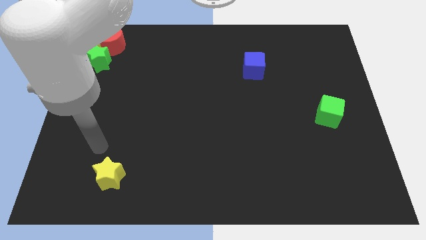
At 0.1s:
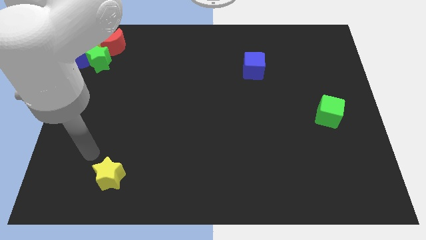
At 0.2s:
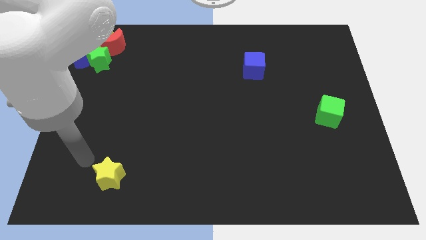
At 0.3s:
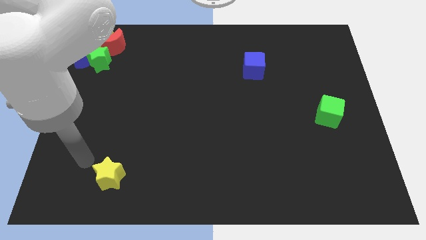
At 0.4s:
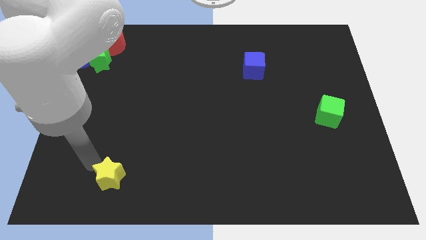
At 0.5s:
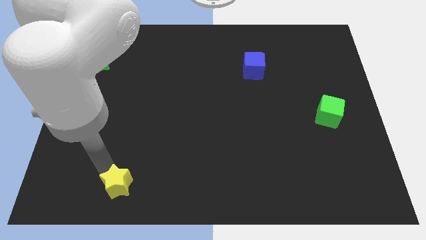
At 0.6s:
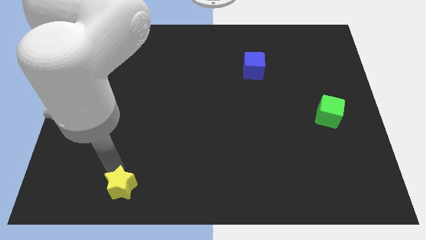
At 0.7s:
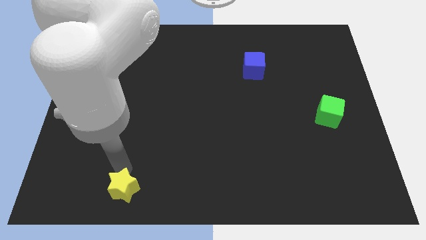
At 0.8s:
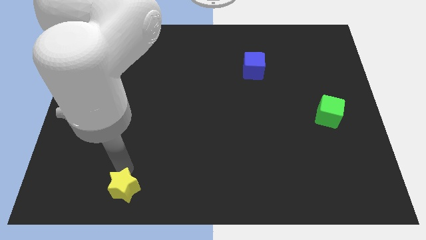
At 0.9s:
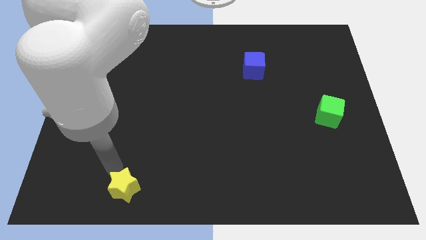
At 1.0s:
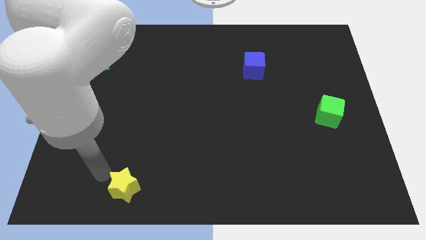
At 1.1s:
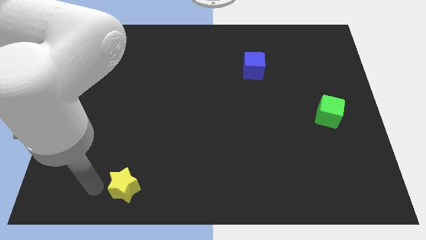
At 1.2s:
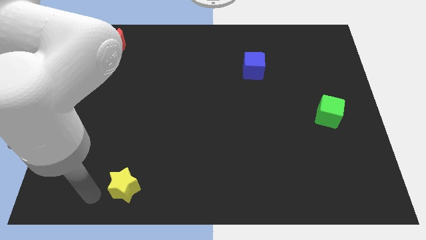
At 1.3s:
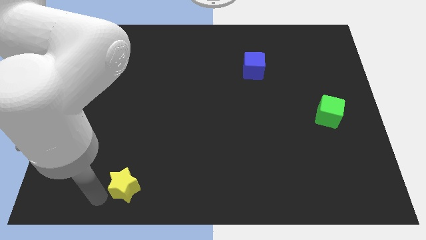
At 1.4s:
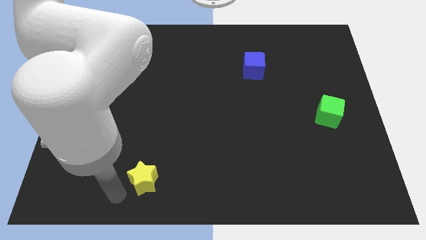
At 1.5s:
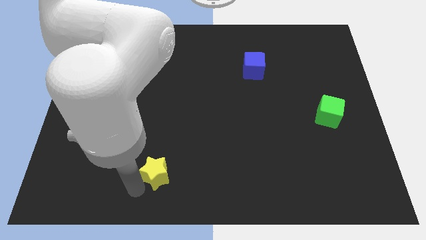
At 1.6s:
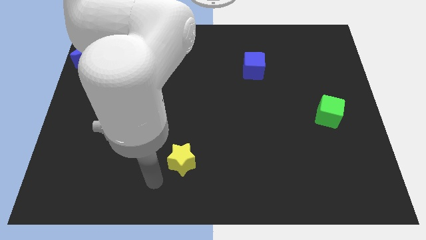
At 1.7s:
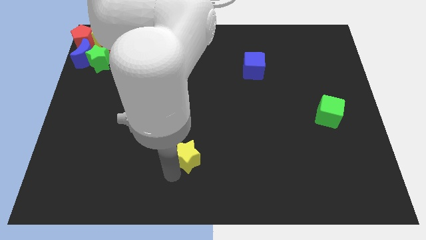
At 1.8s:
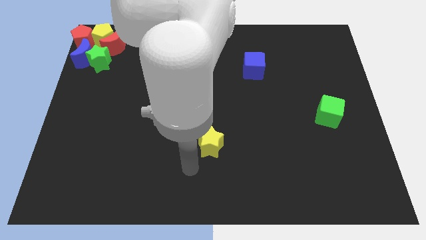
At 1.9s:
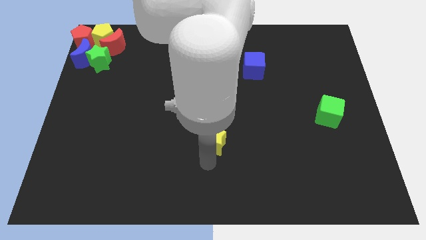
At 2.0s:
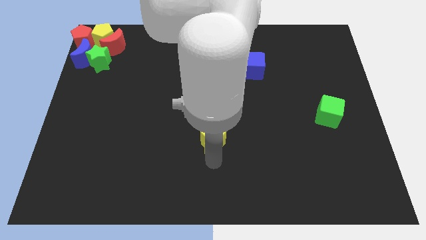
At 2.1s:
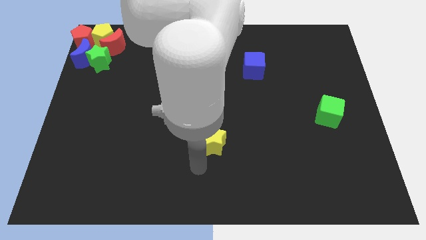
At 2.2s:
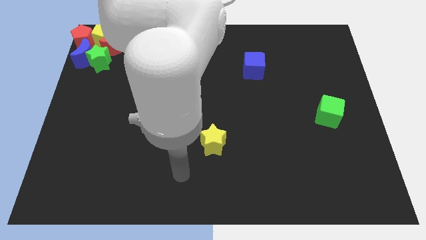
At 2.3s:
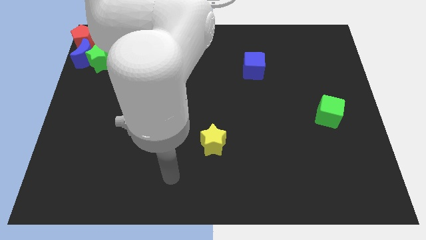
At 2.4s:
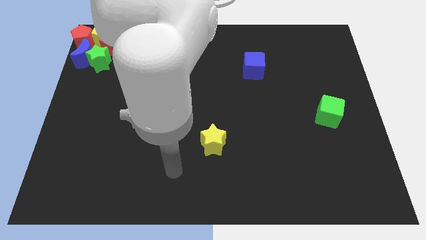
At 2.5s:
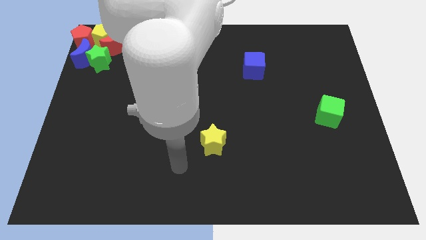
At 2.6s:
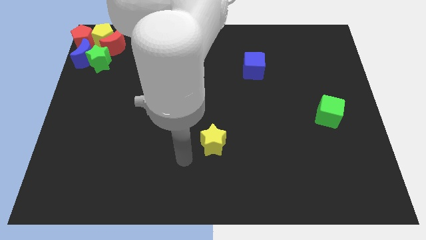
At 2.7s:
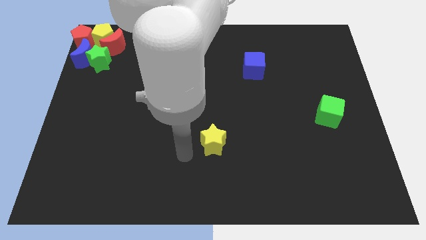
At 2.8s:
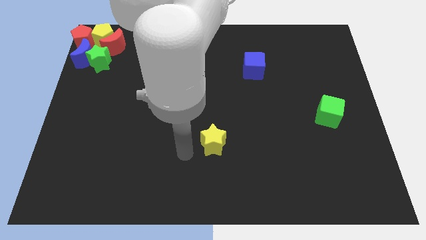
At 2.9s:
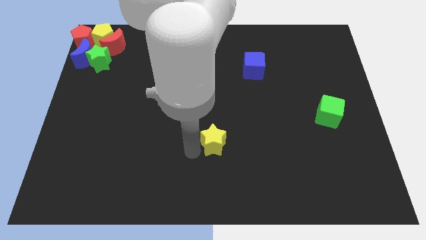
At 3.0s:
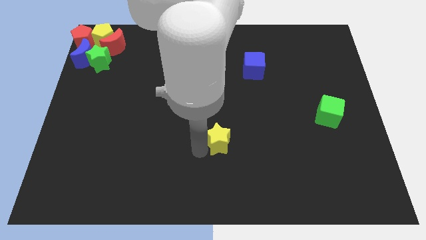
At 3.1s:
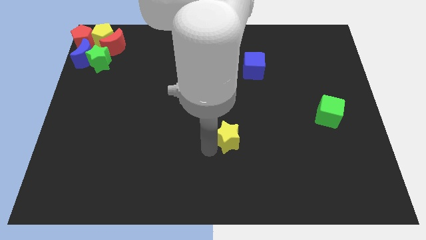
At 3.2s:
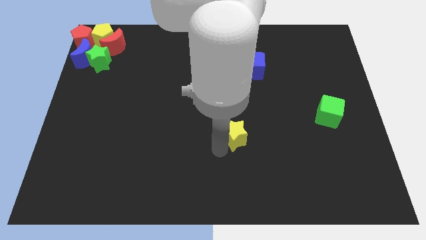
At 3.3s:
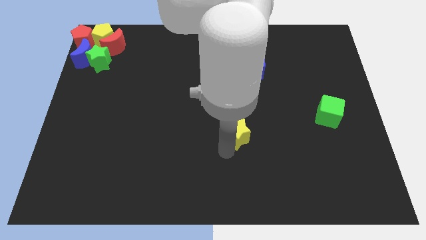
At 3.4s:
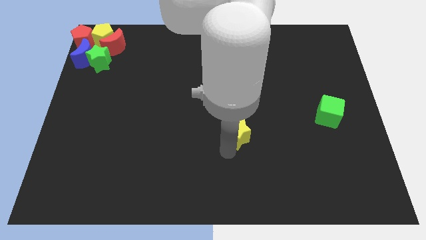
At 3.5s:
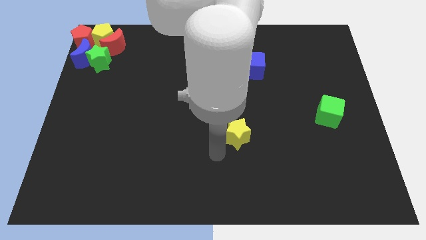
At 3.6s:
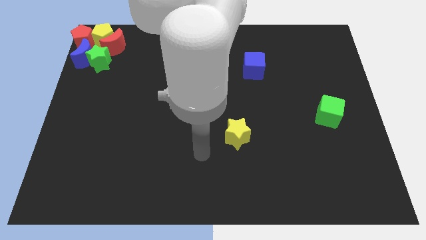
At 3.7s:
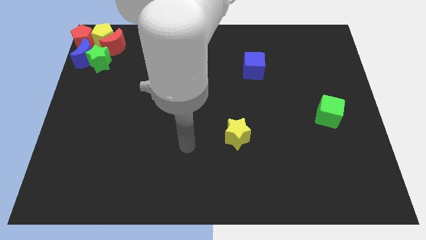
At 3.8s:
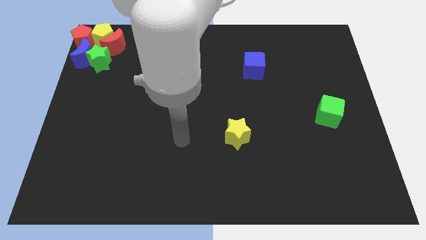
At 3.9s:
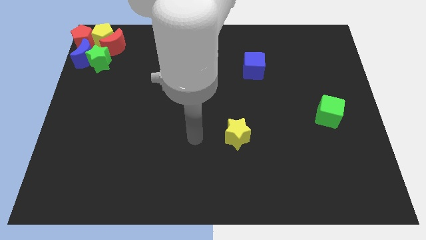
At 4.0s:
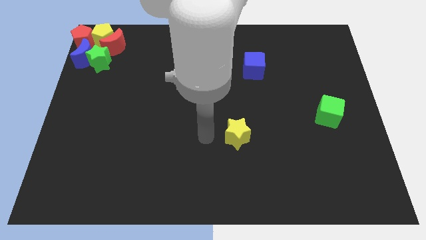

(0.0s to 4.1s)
place the yellow star below the blue moon

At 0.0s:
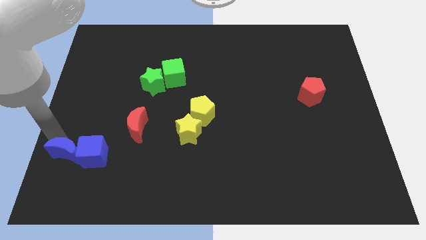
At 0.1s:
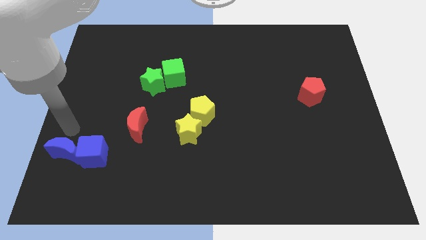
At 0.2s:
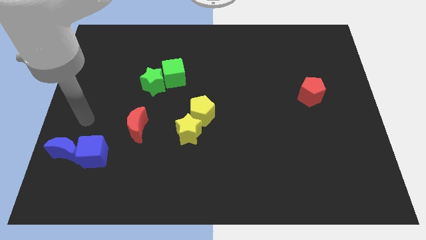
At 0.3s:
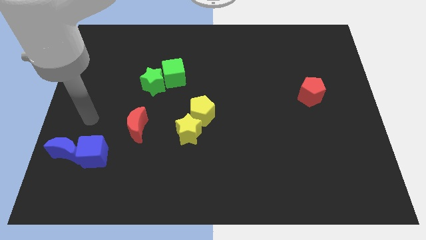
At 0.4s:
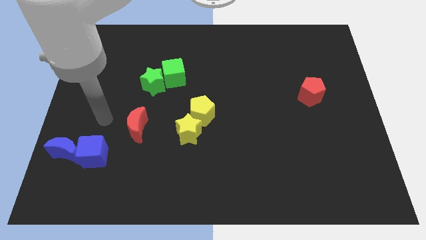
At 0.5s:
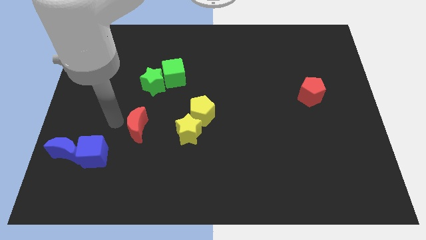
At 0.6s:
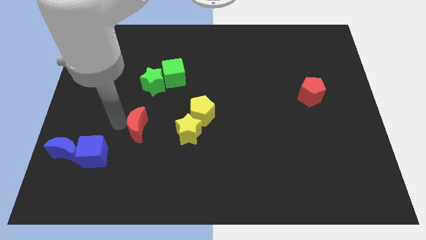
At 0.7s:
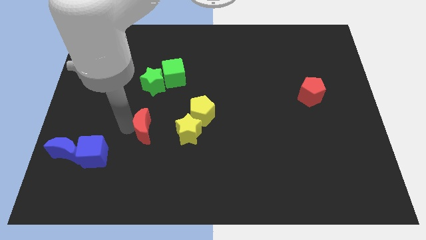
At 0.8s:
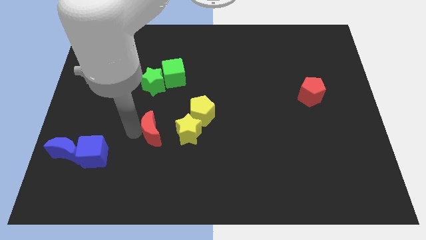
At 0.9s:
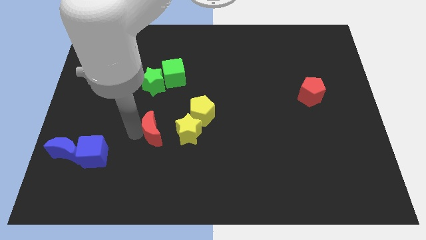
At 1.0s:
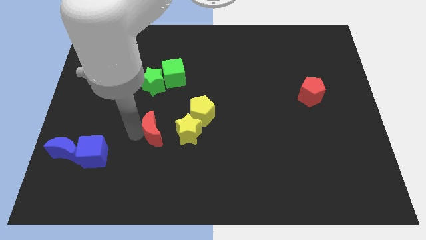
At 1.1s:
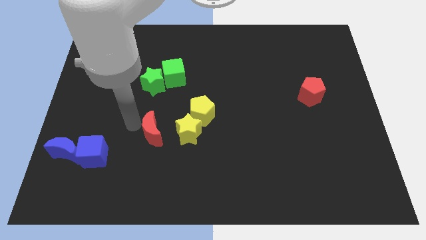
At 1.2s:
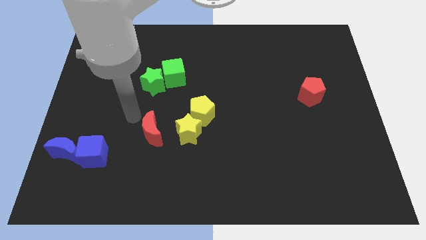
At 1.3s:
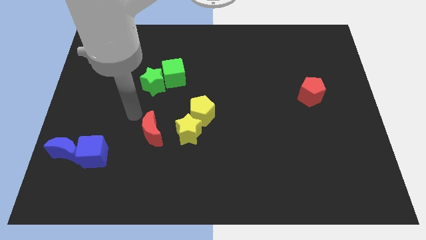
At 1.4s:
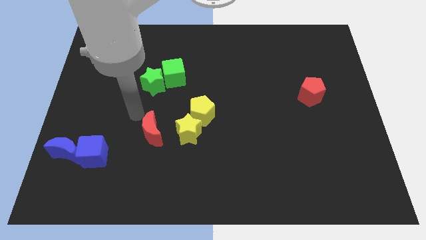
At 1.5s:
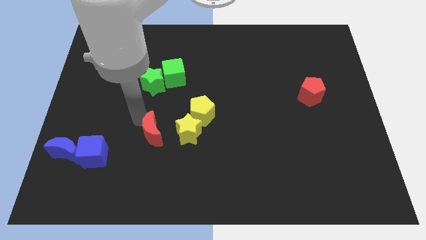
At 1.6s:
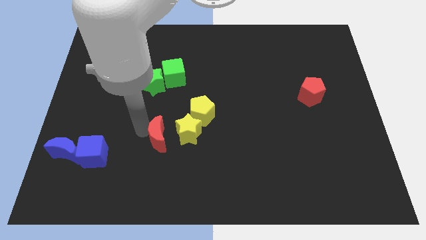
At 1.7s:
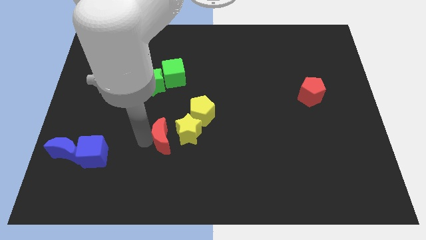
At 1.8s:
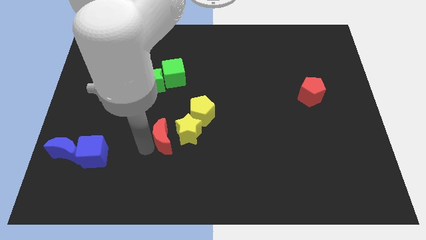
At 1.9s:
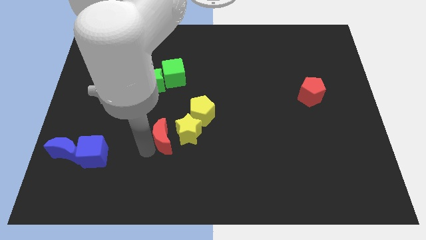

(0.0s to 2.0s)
push the red moon close to the yellow star

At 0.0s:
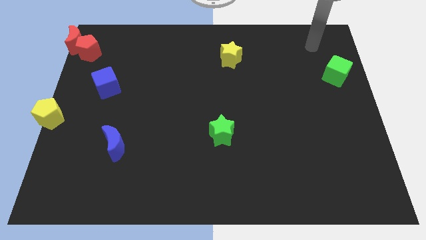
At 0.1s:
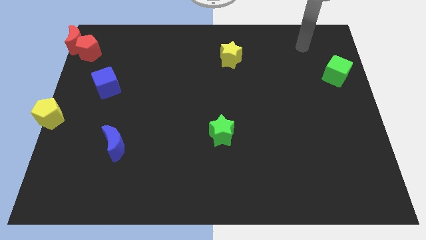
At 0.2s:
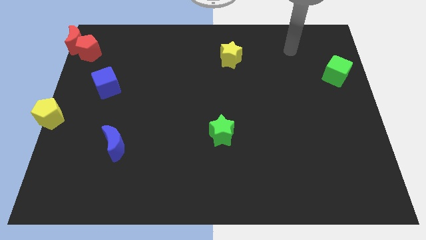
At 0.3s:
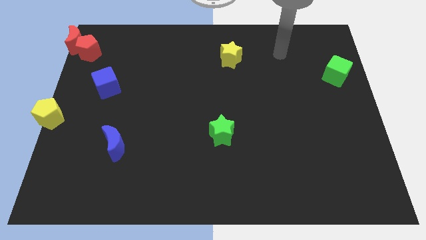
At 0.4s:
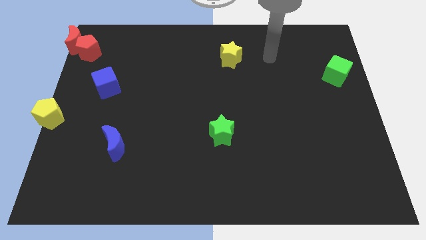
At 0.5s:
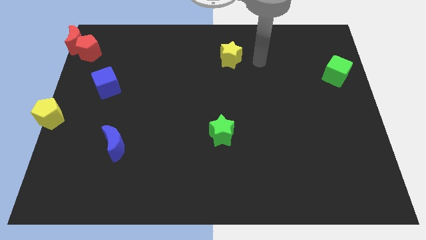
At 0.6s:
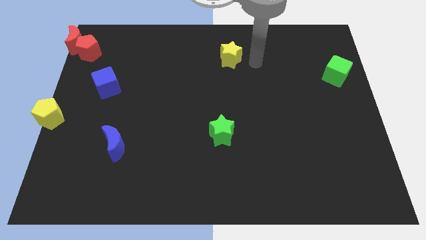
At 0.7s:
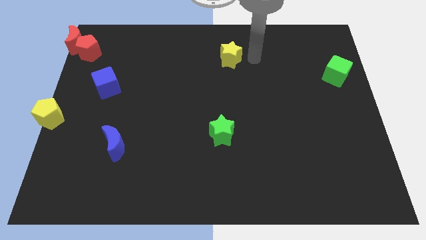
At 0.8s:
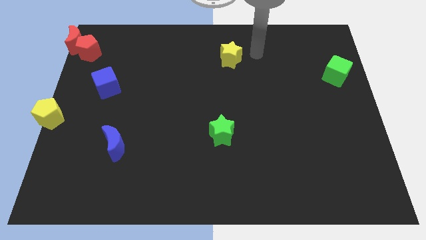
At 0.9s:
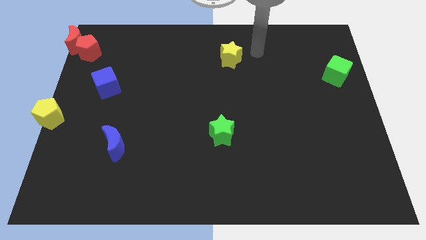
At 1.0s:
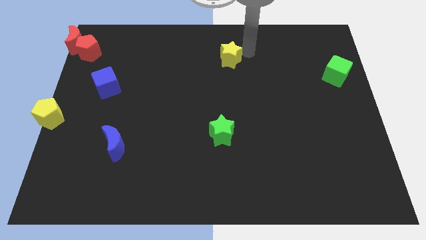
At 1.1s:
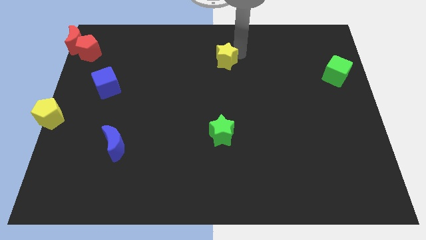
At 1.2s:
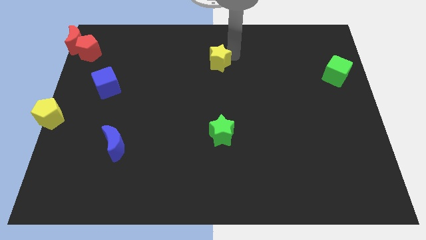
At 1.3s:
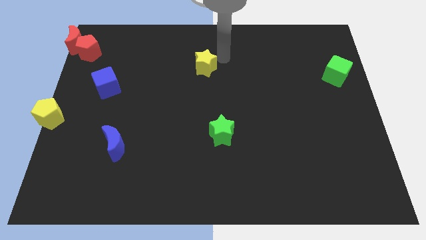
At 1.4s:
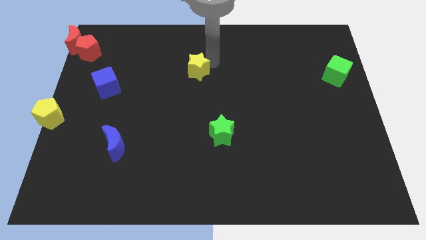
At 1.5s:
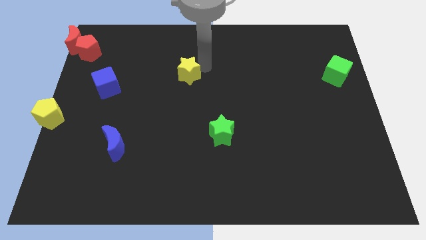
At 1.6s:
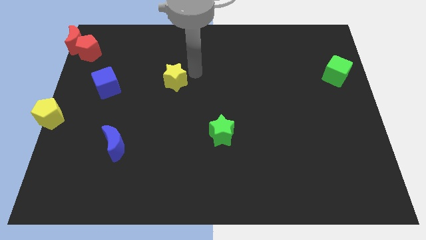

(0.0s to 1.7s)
move the yellow star diagonal to the green star

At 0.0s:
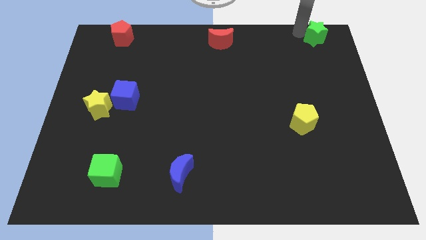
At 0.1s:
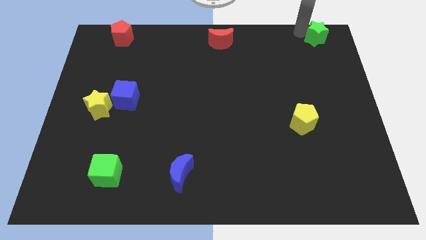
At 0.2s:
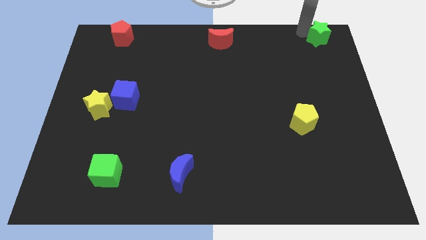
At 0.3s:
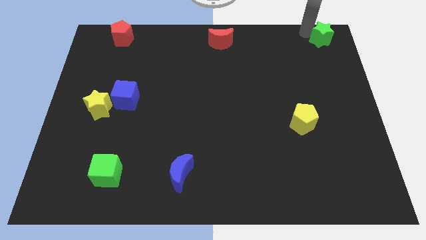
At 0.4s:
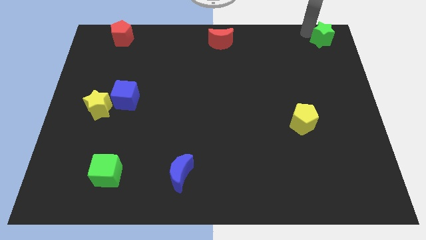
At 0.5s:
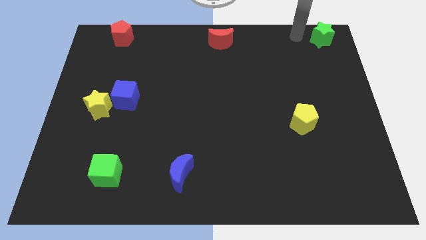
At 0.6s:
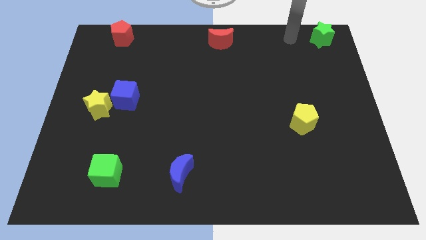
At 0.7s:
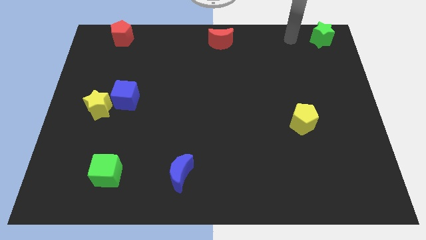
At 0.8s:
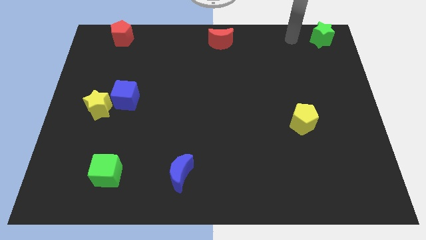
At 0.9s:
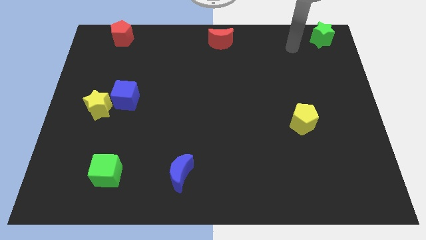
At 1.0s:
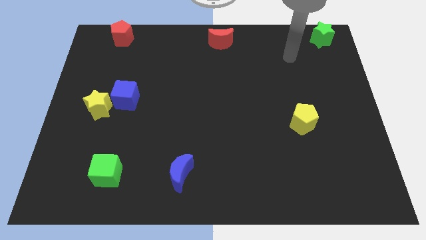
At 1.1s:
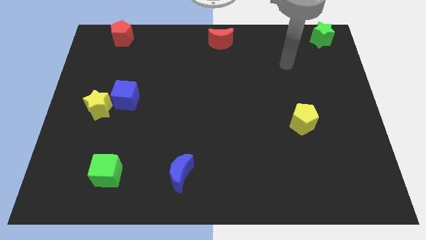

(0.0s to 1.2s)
drag the green star to the top right
